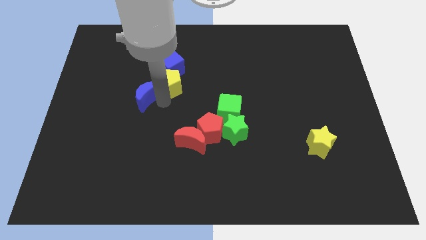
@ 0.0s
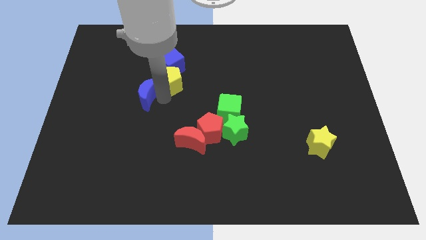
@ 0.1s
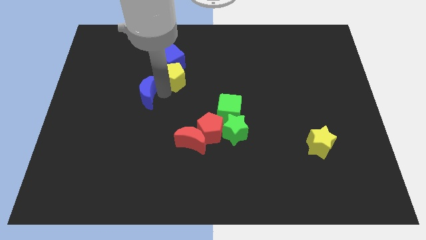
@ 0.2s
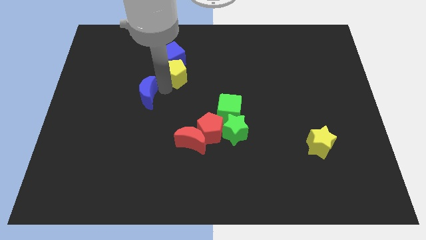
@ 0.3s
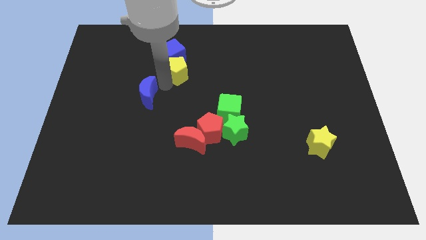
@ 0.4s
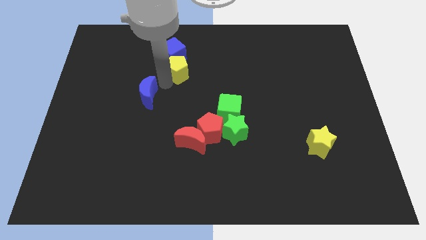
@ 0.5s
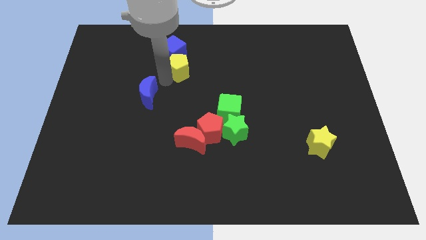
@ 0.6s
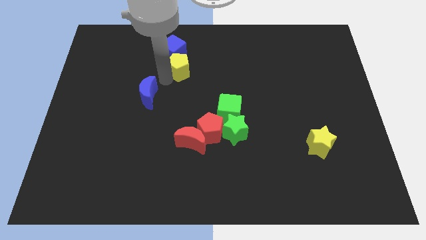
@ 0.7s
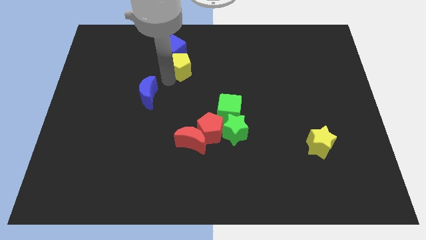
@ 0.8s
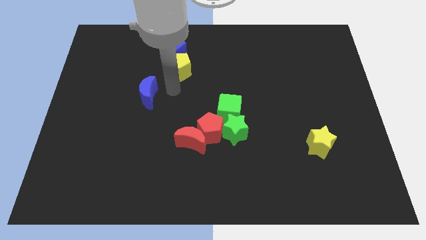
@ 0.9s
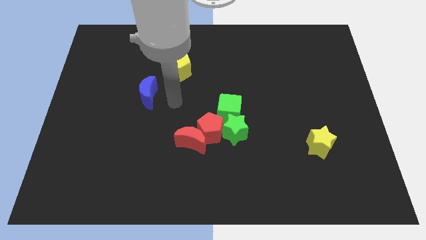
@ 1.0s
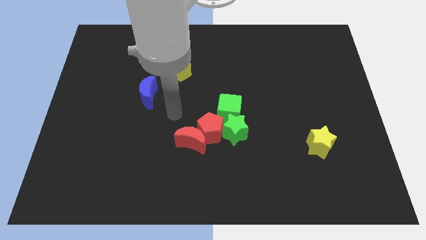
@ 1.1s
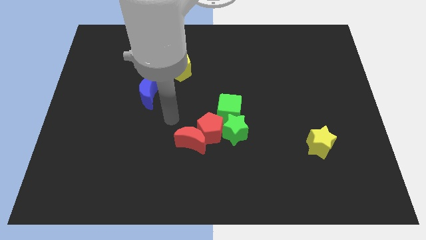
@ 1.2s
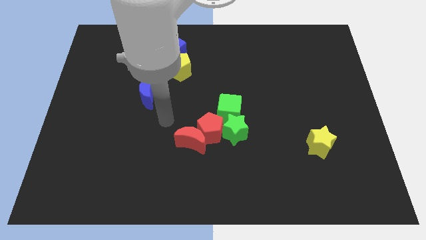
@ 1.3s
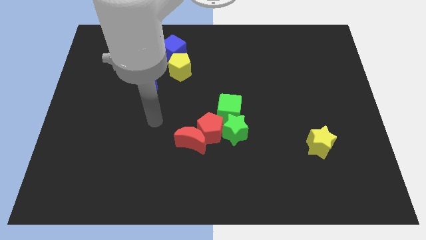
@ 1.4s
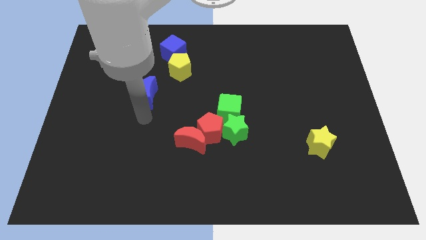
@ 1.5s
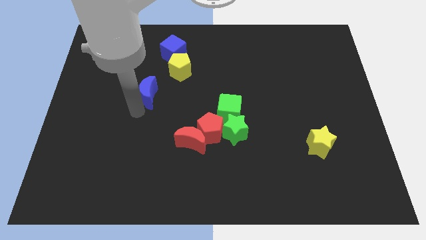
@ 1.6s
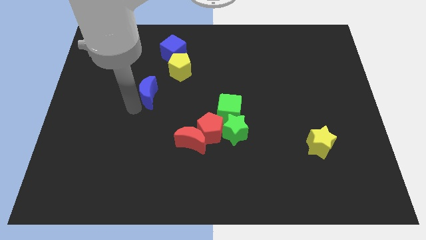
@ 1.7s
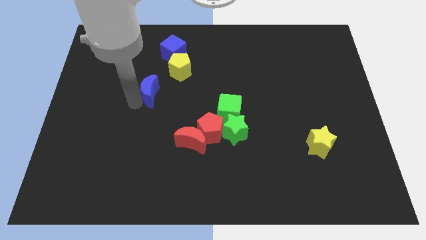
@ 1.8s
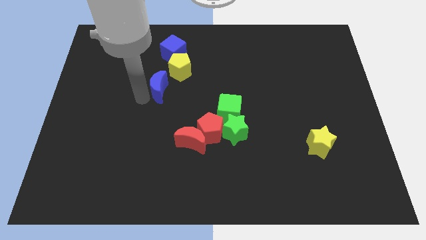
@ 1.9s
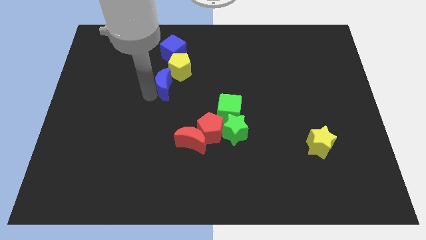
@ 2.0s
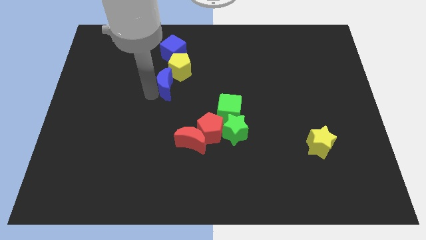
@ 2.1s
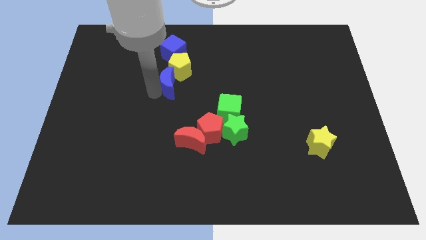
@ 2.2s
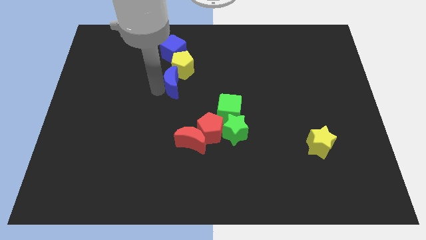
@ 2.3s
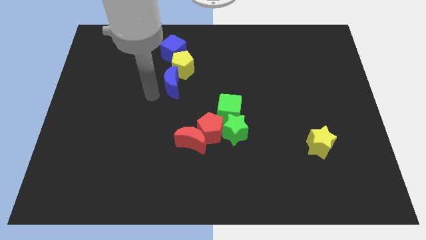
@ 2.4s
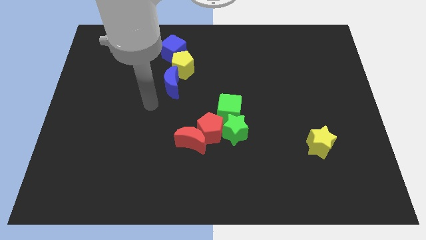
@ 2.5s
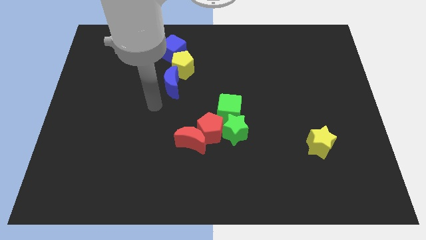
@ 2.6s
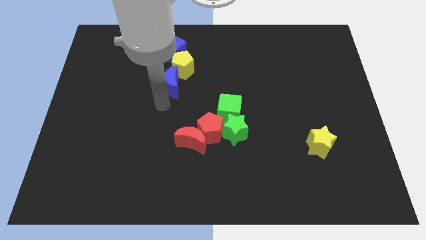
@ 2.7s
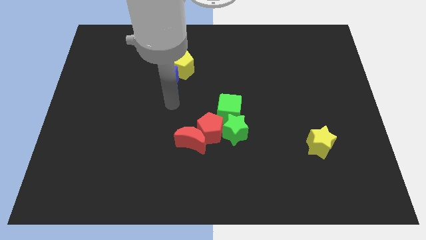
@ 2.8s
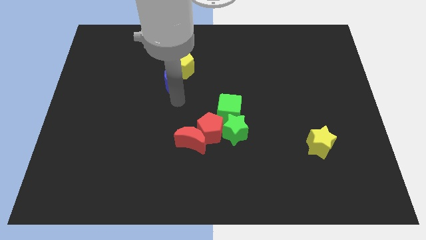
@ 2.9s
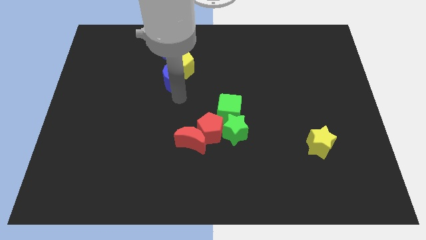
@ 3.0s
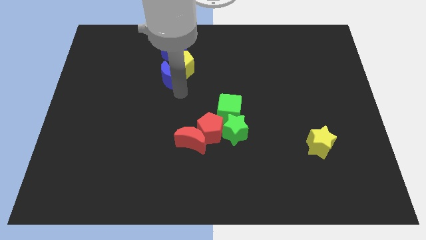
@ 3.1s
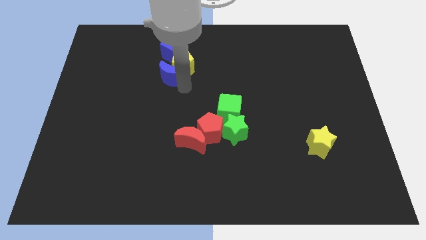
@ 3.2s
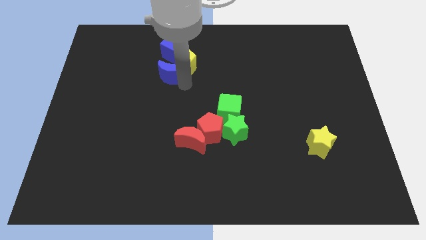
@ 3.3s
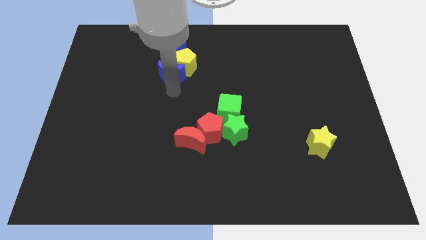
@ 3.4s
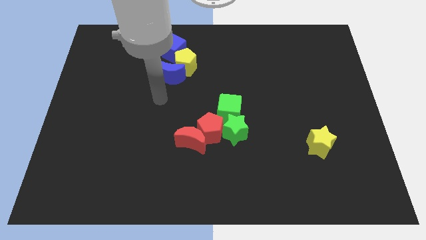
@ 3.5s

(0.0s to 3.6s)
drag the blue moonblue cube and the yellow pentagon towards the top center

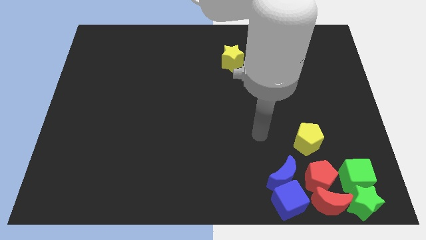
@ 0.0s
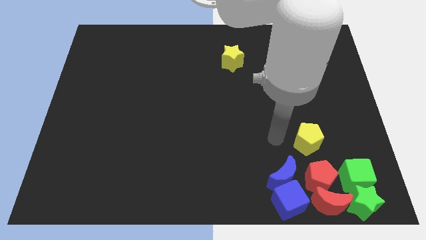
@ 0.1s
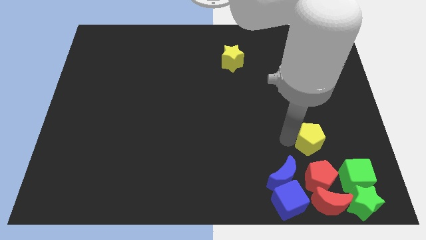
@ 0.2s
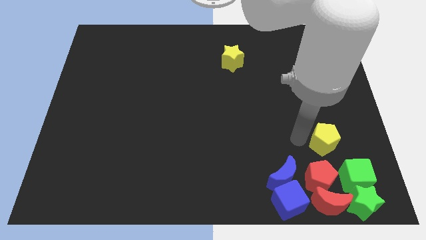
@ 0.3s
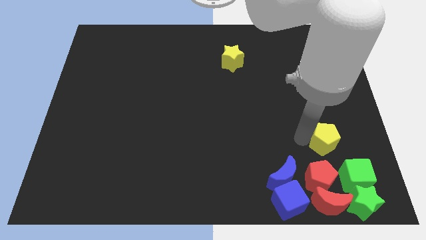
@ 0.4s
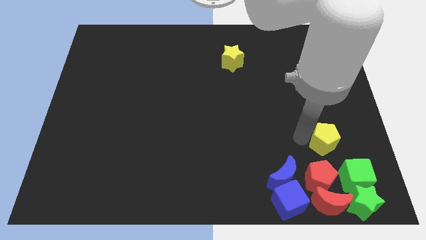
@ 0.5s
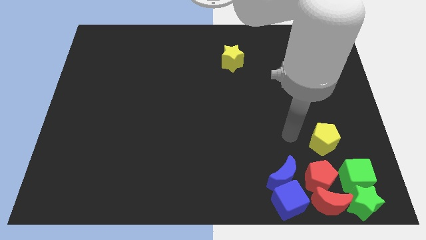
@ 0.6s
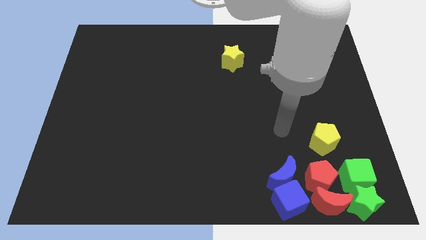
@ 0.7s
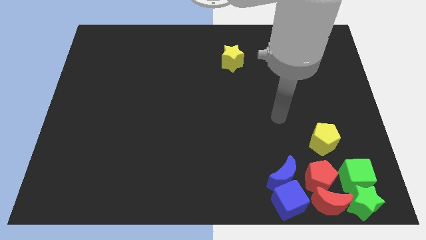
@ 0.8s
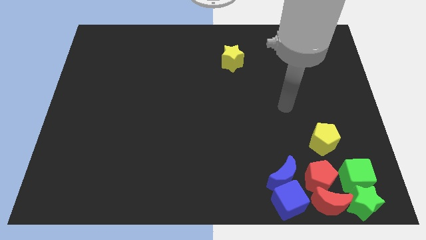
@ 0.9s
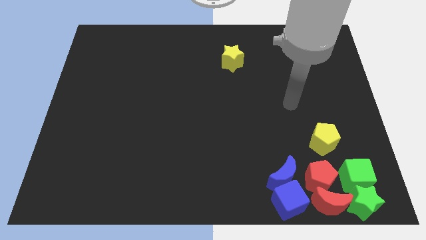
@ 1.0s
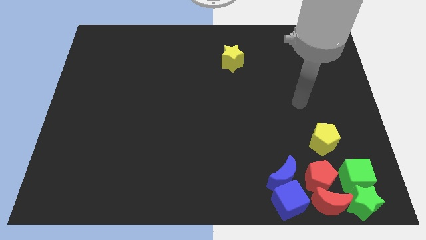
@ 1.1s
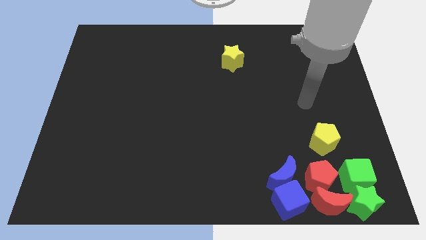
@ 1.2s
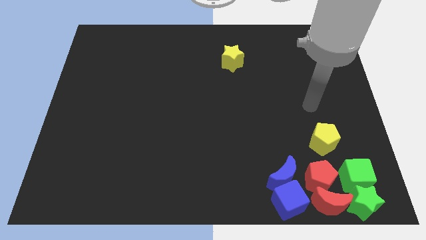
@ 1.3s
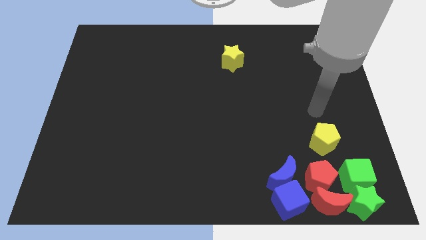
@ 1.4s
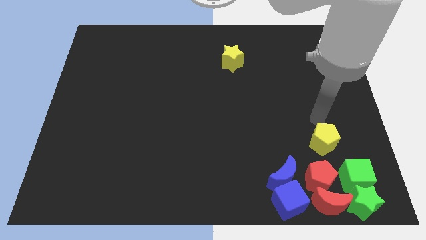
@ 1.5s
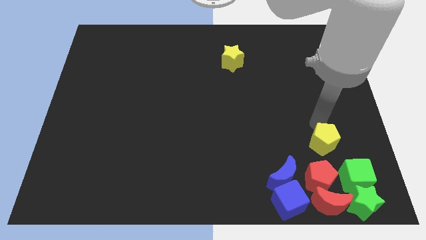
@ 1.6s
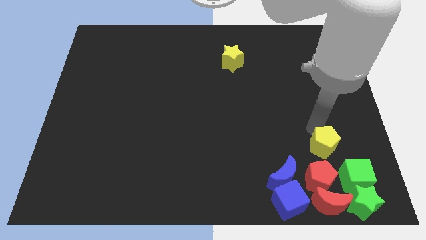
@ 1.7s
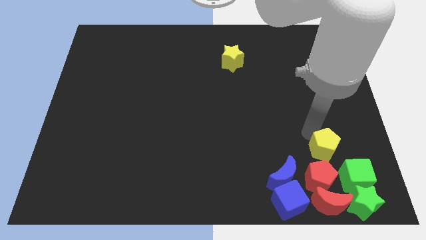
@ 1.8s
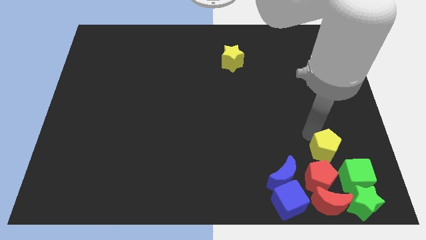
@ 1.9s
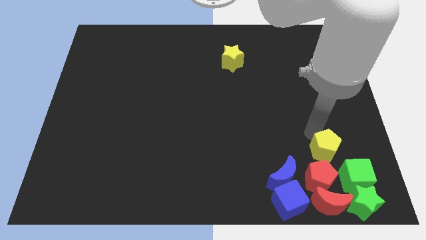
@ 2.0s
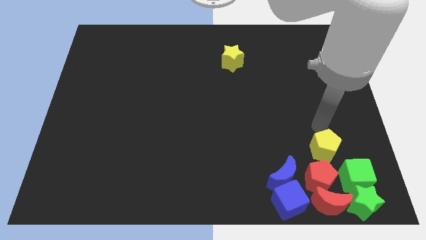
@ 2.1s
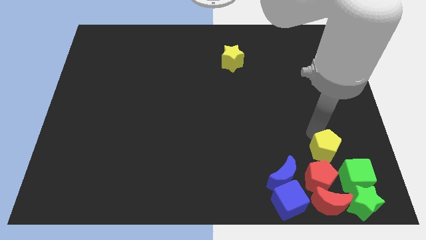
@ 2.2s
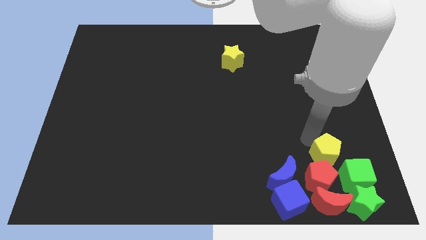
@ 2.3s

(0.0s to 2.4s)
push the yellow pentagon above the red pentagon

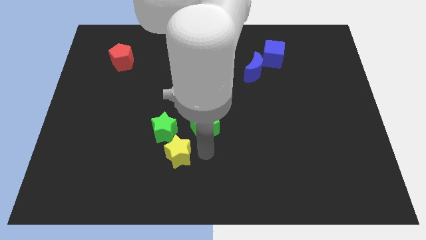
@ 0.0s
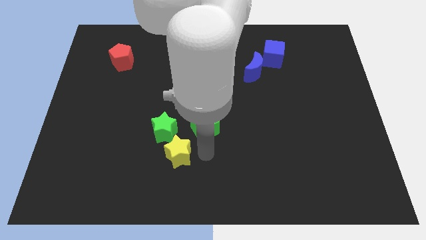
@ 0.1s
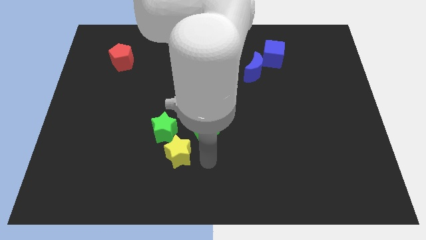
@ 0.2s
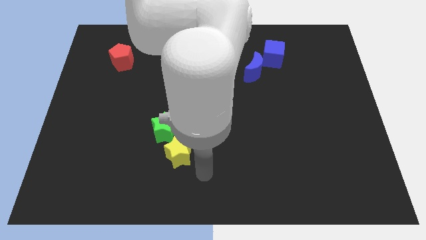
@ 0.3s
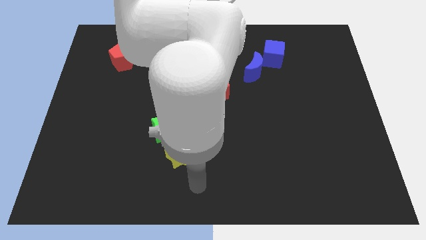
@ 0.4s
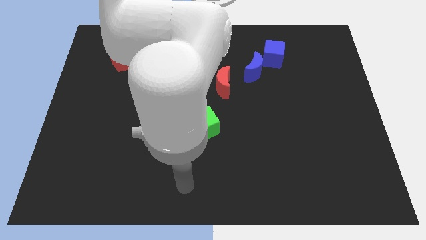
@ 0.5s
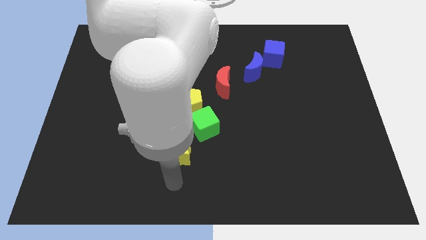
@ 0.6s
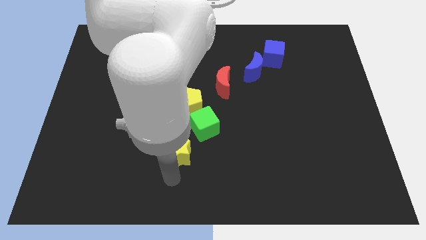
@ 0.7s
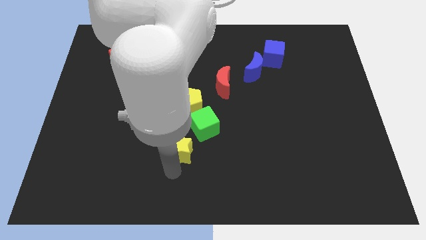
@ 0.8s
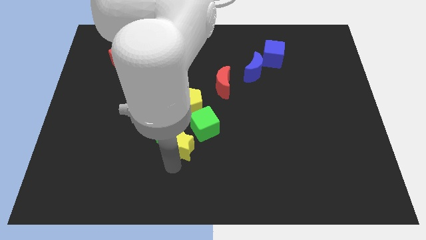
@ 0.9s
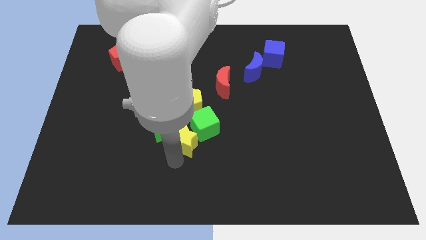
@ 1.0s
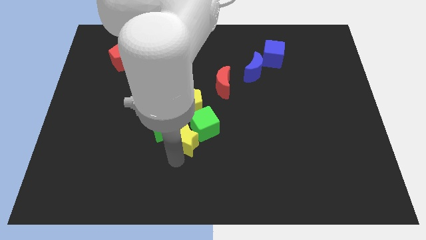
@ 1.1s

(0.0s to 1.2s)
move the yellow star slightly close to the bottom left of the green cube

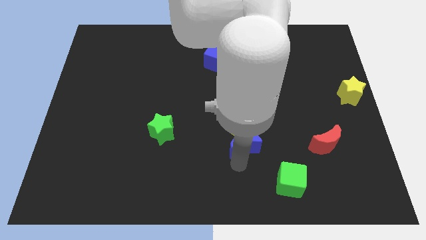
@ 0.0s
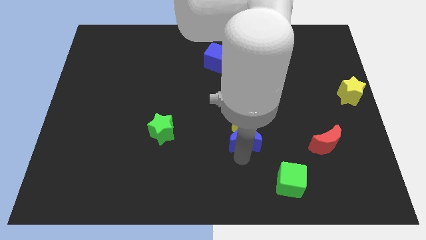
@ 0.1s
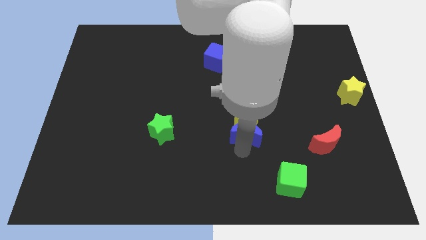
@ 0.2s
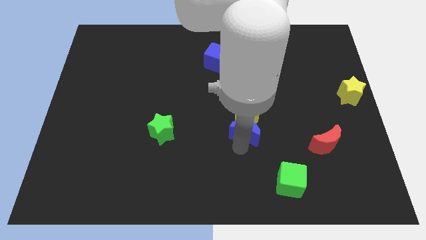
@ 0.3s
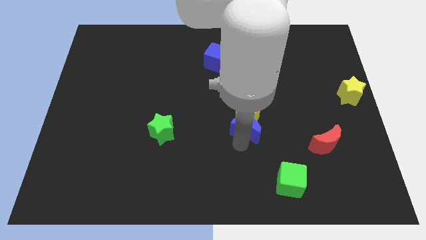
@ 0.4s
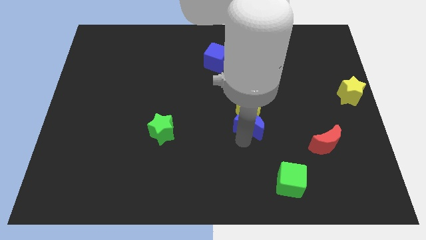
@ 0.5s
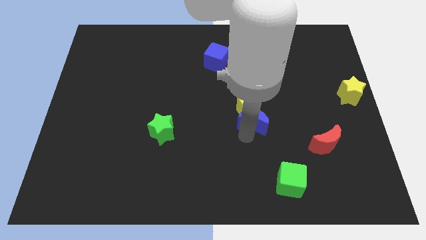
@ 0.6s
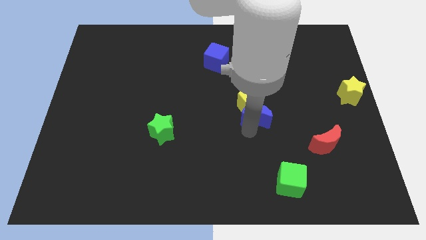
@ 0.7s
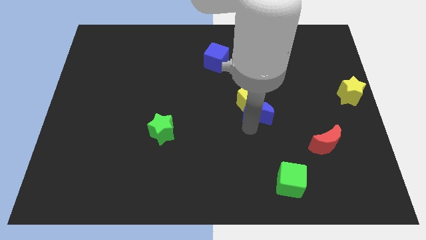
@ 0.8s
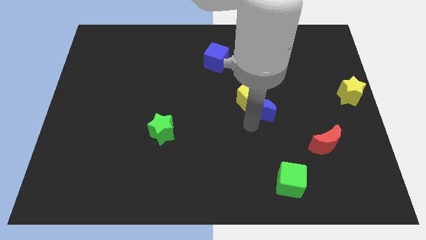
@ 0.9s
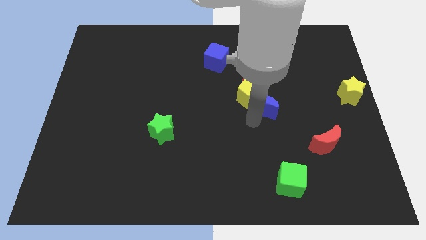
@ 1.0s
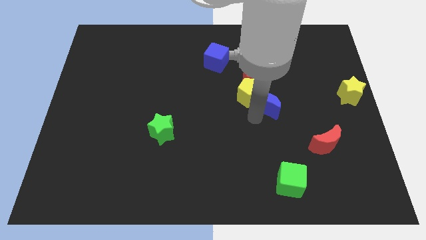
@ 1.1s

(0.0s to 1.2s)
push the yellow pentagon and blue moon to the top side

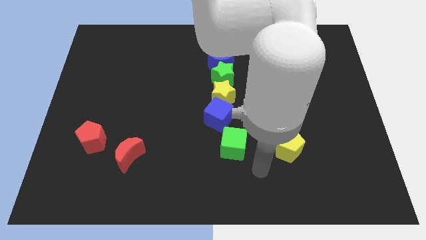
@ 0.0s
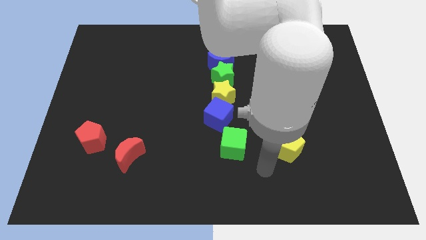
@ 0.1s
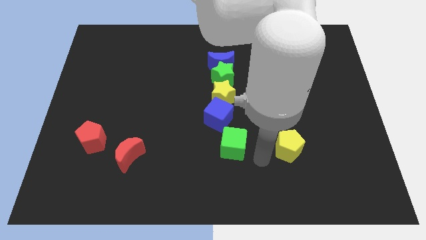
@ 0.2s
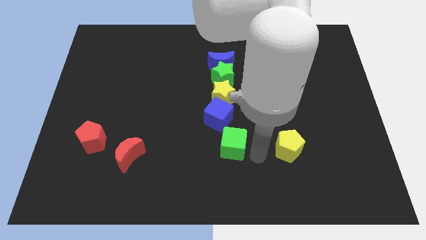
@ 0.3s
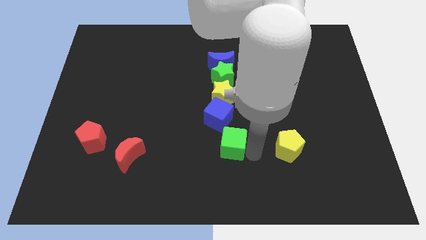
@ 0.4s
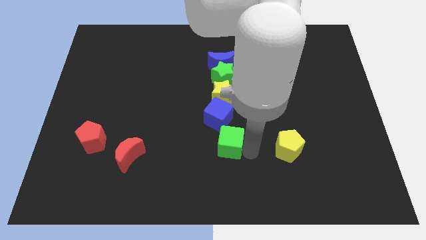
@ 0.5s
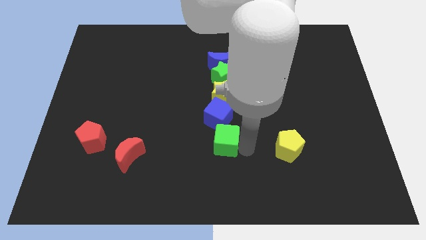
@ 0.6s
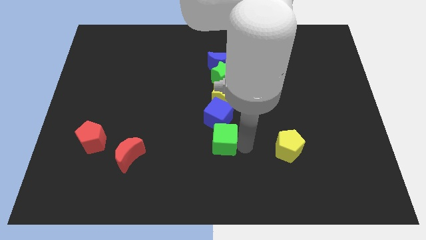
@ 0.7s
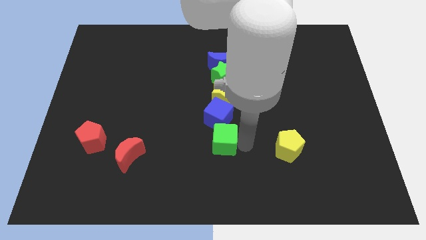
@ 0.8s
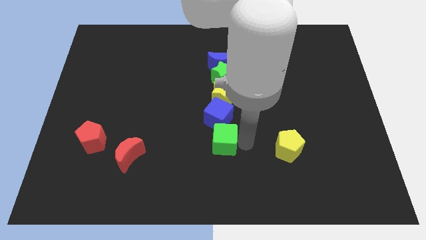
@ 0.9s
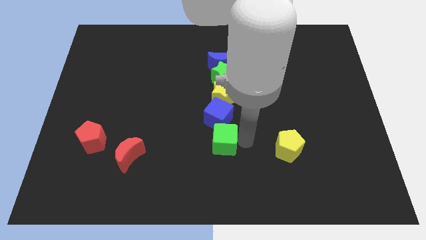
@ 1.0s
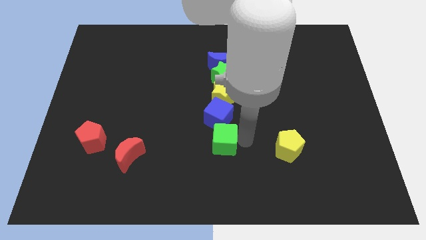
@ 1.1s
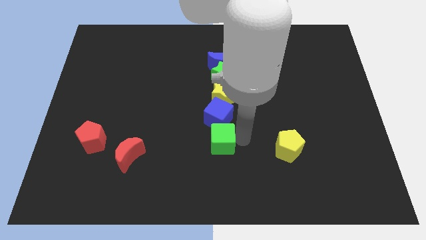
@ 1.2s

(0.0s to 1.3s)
move the green cube towards the blue cube
